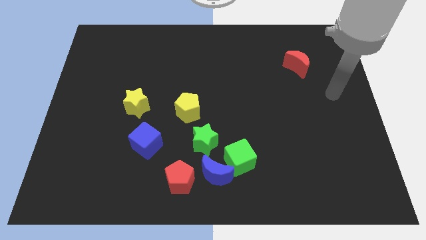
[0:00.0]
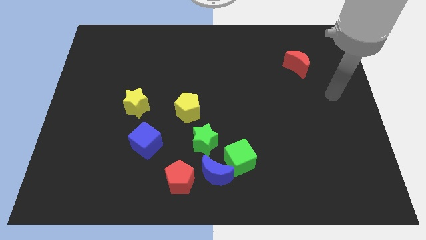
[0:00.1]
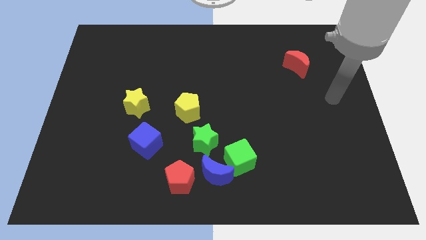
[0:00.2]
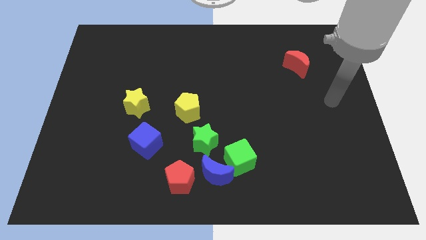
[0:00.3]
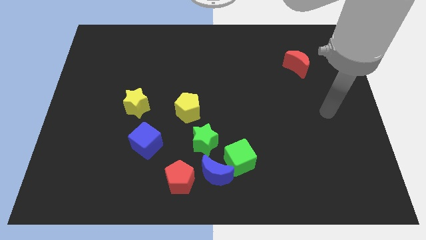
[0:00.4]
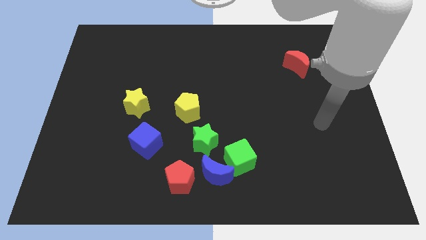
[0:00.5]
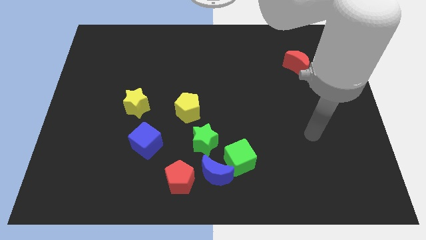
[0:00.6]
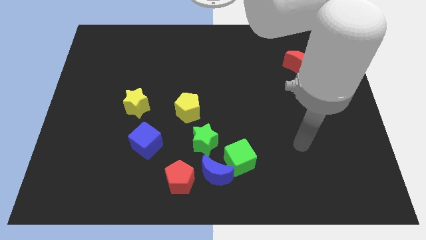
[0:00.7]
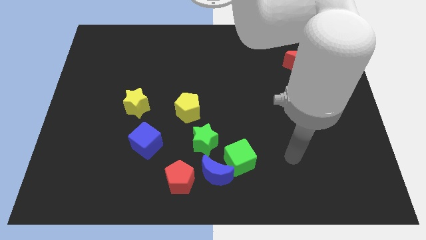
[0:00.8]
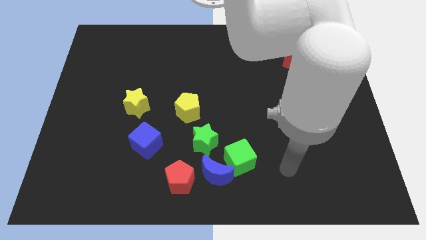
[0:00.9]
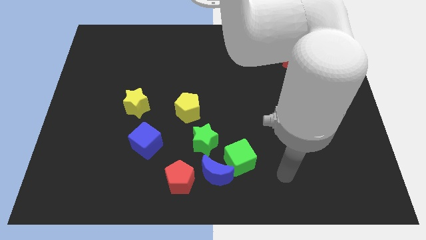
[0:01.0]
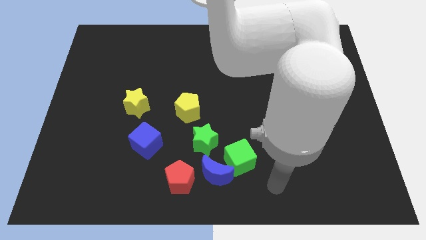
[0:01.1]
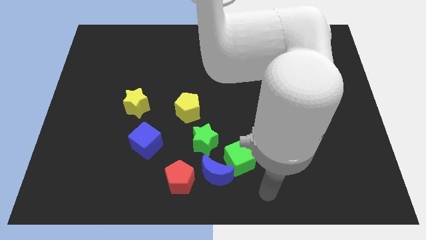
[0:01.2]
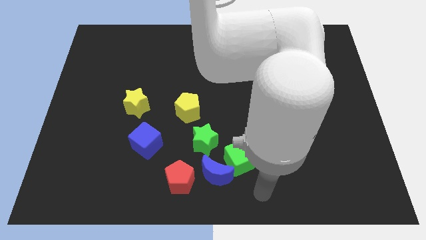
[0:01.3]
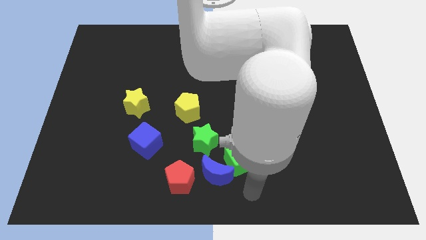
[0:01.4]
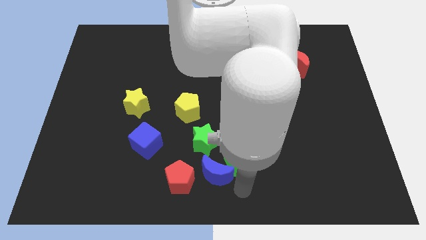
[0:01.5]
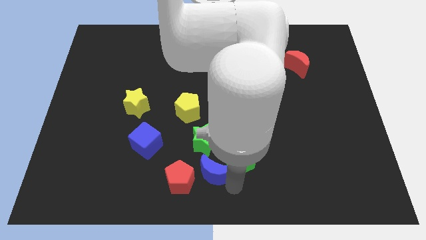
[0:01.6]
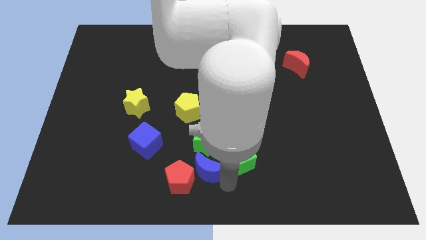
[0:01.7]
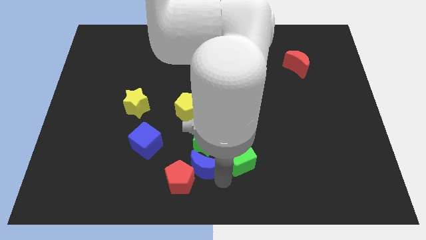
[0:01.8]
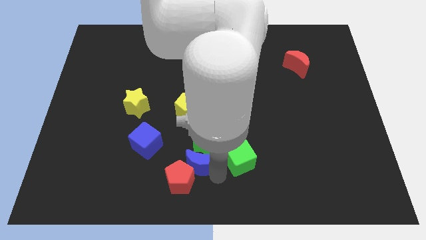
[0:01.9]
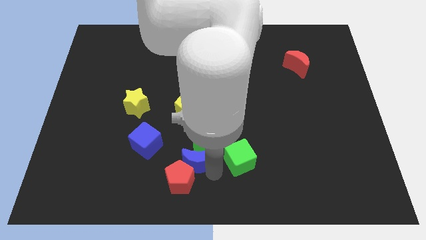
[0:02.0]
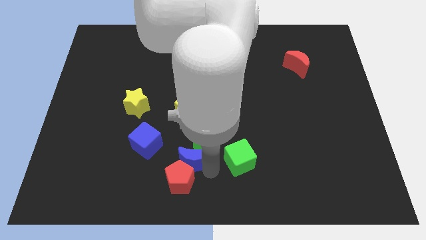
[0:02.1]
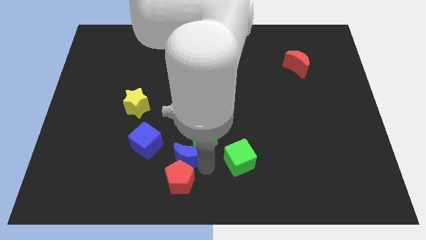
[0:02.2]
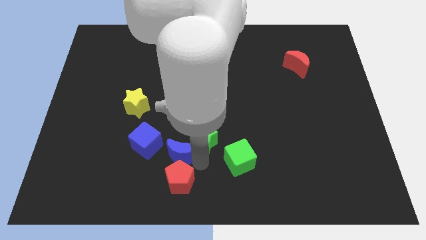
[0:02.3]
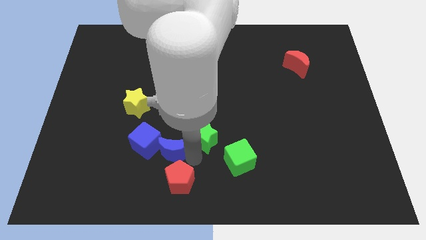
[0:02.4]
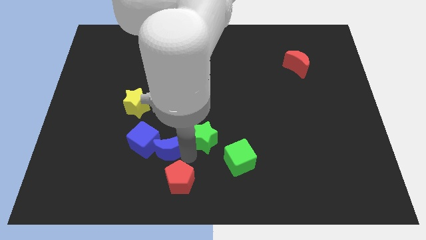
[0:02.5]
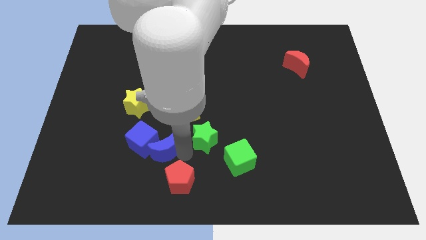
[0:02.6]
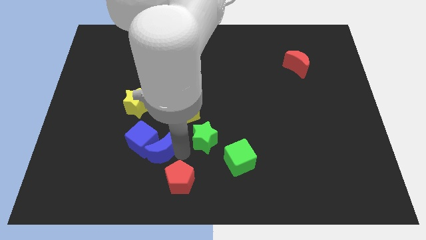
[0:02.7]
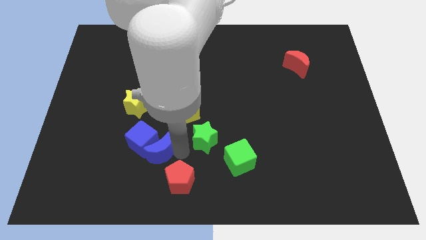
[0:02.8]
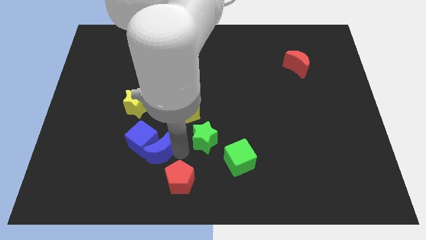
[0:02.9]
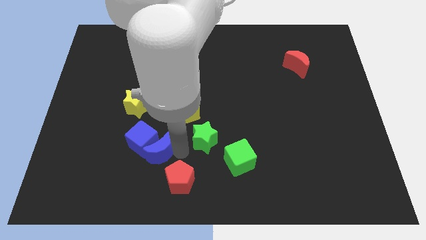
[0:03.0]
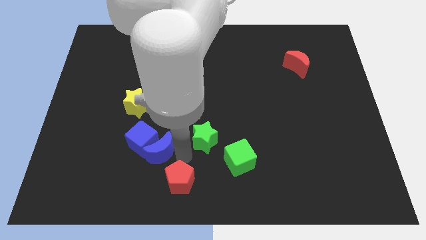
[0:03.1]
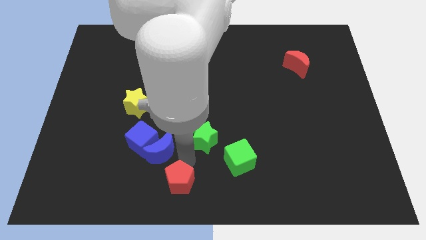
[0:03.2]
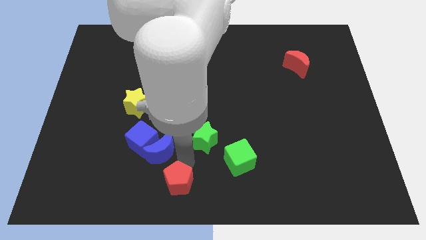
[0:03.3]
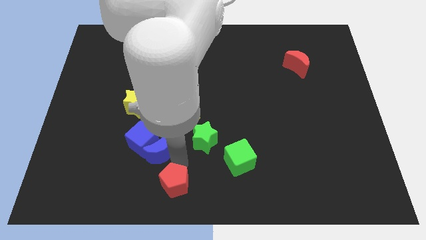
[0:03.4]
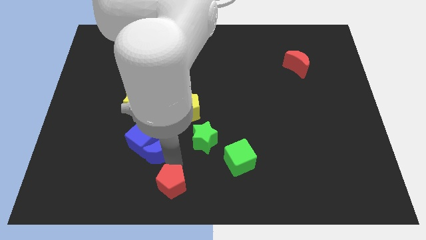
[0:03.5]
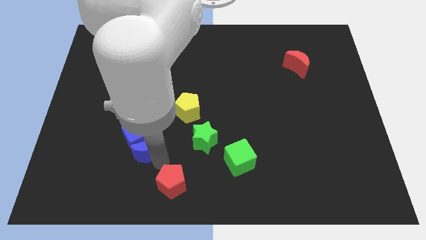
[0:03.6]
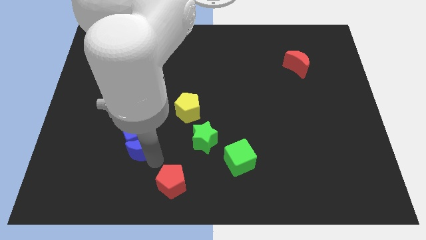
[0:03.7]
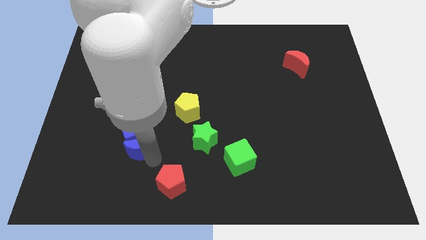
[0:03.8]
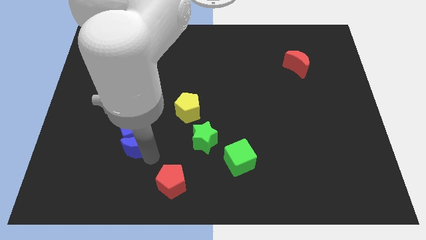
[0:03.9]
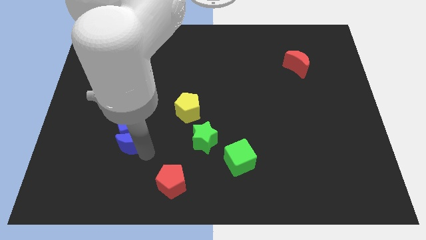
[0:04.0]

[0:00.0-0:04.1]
push the blue crescent into the blue cube

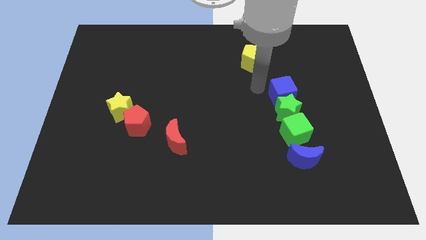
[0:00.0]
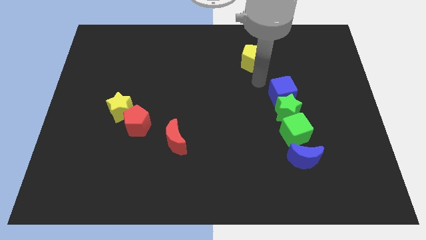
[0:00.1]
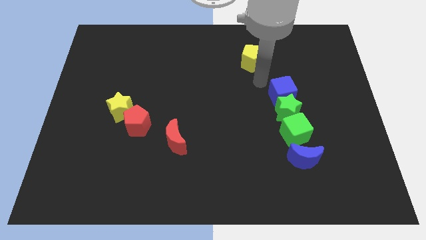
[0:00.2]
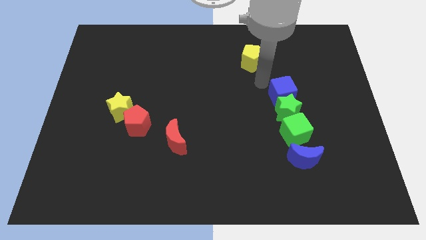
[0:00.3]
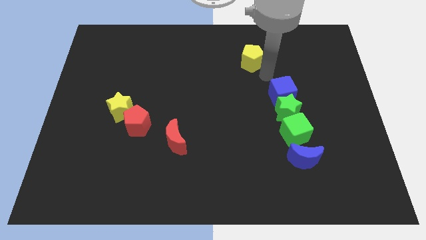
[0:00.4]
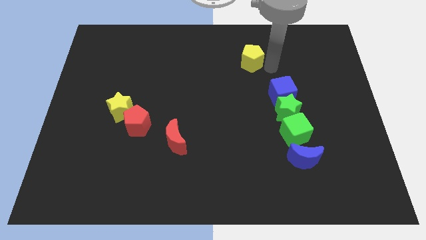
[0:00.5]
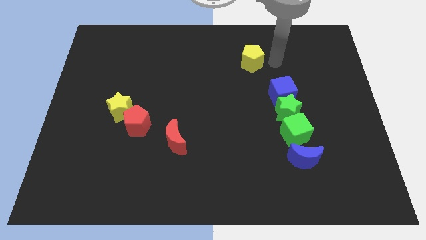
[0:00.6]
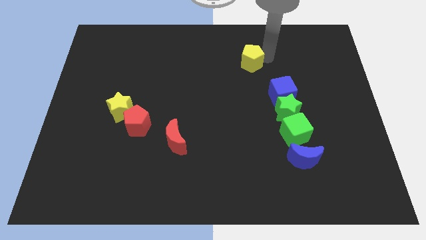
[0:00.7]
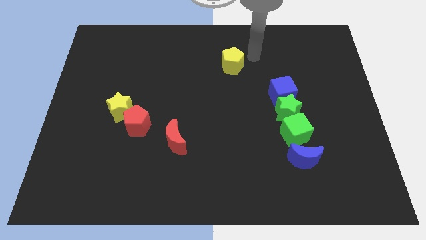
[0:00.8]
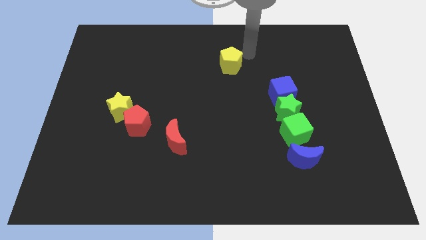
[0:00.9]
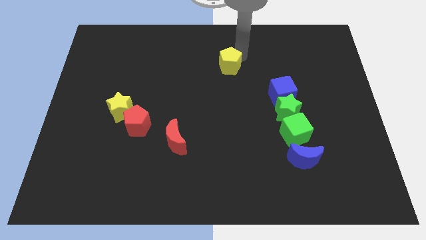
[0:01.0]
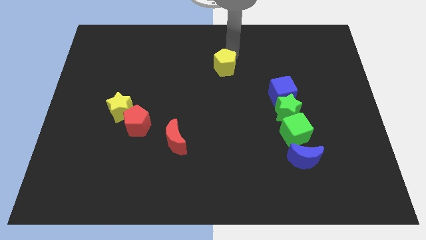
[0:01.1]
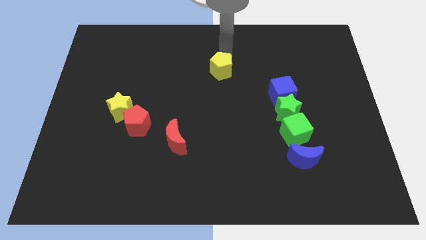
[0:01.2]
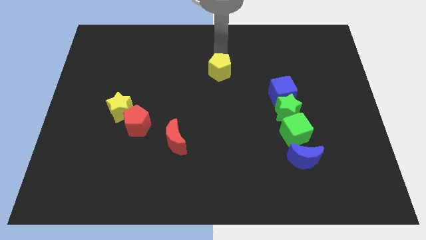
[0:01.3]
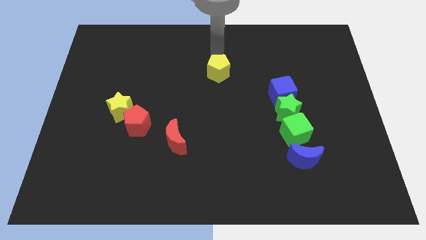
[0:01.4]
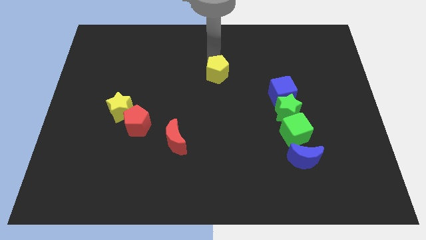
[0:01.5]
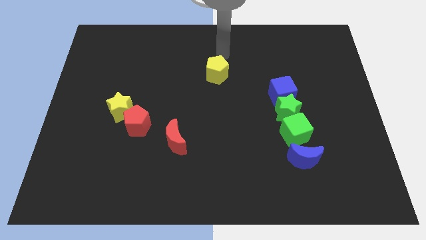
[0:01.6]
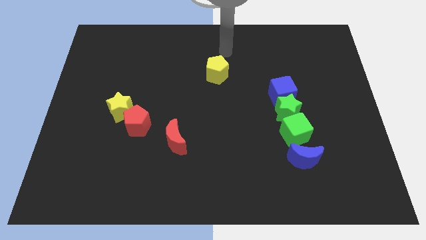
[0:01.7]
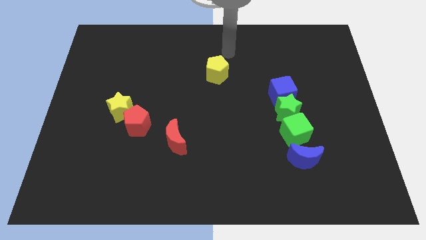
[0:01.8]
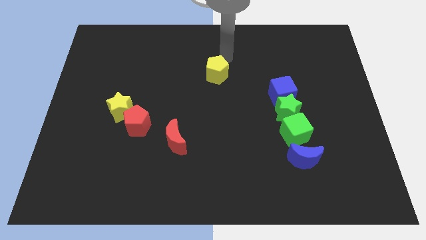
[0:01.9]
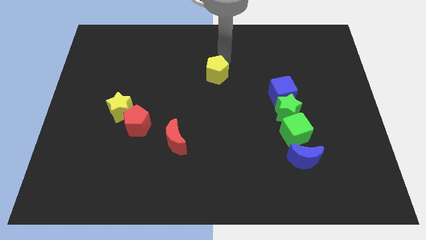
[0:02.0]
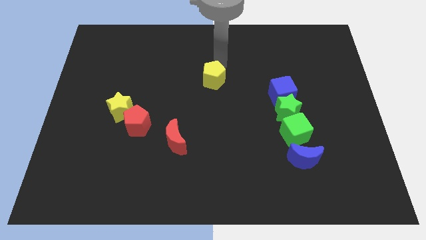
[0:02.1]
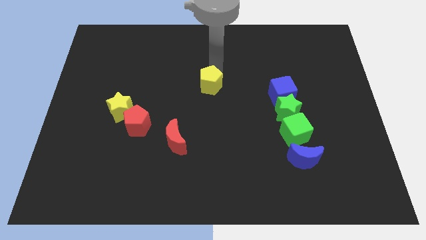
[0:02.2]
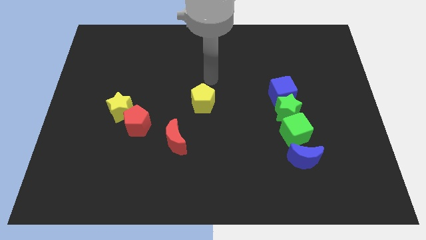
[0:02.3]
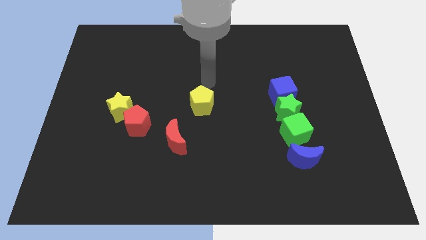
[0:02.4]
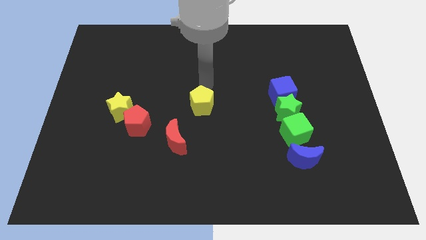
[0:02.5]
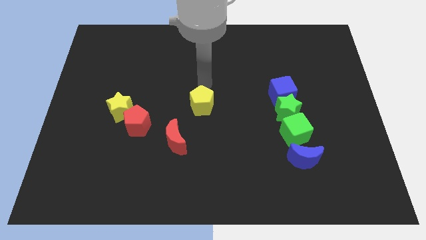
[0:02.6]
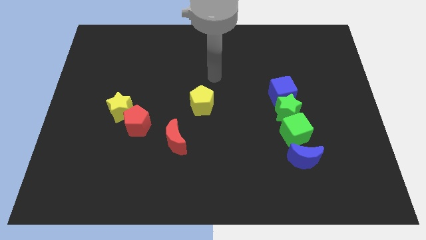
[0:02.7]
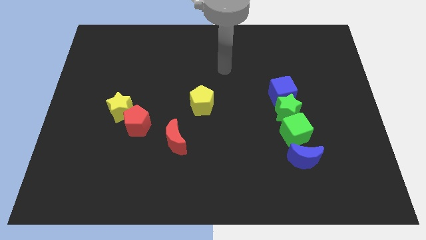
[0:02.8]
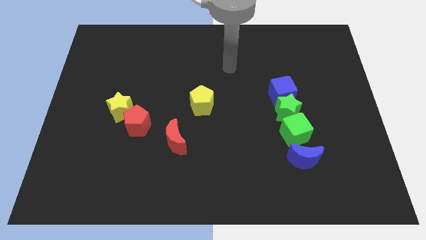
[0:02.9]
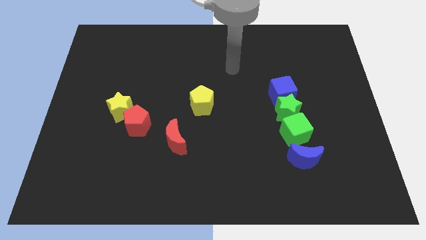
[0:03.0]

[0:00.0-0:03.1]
place the yellow pentagon in the center of the board

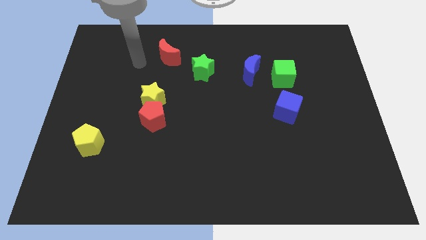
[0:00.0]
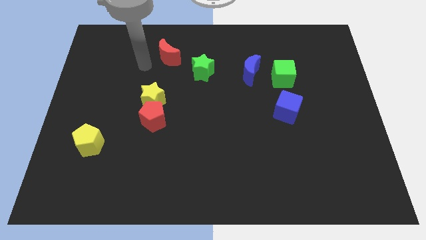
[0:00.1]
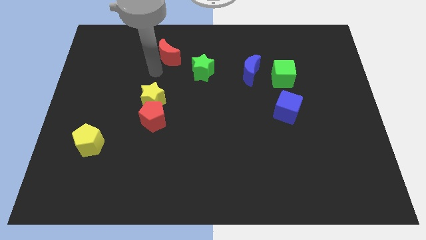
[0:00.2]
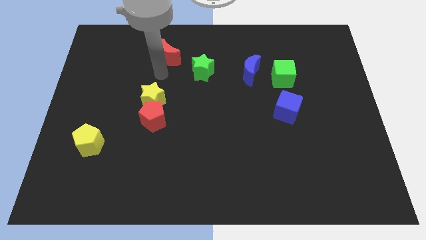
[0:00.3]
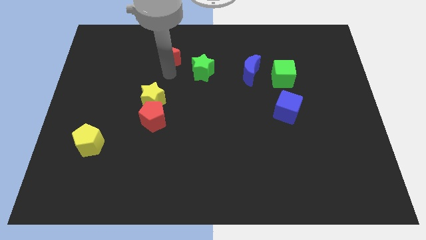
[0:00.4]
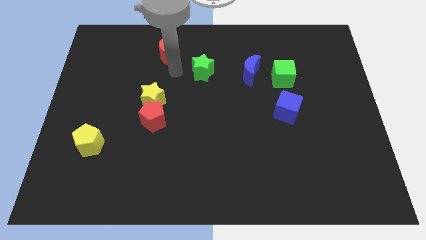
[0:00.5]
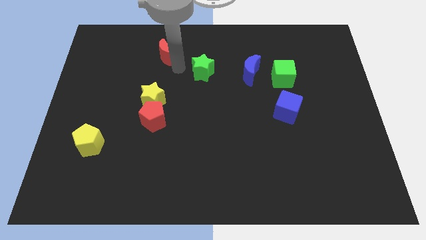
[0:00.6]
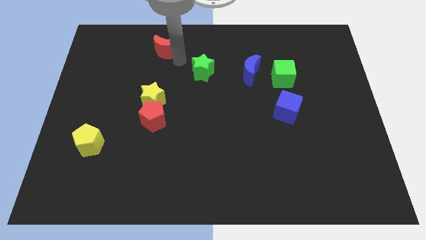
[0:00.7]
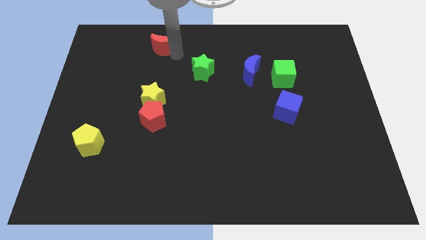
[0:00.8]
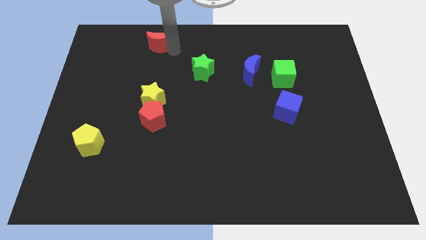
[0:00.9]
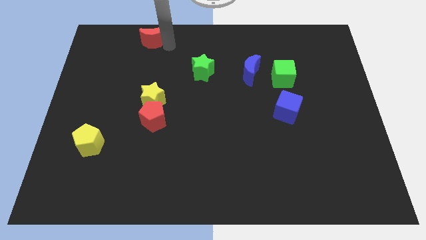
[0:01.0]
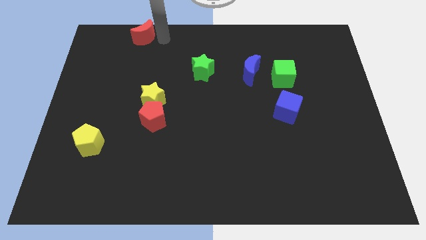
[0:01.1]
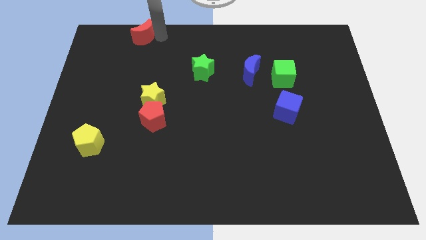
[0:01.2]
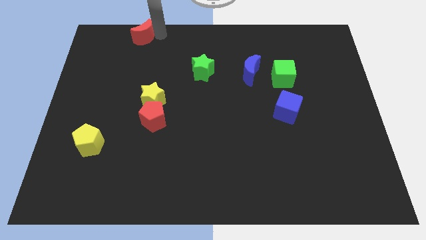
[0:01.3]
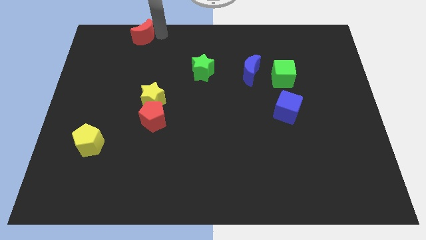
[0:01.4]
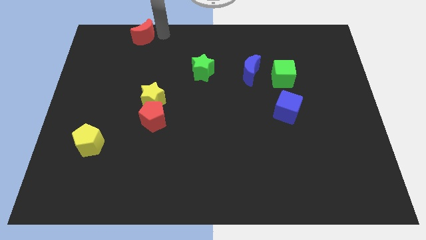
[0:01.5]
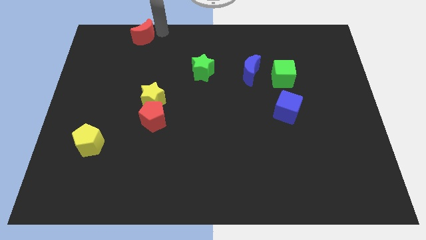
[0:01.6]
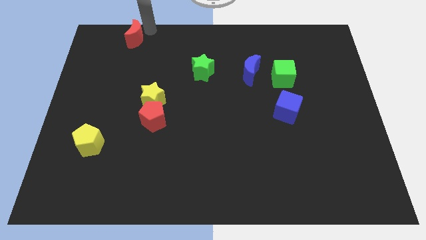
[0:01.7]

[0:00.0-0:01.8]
push the red crescent towards top left
